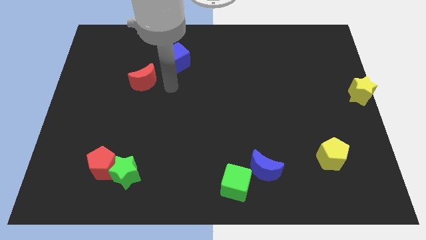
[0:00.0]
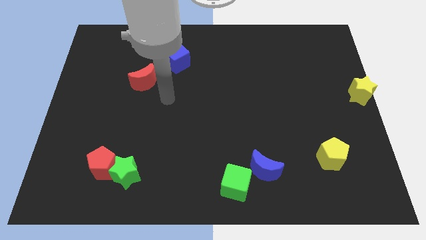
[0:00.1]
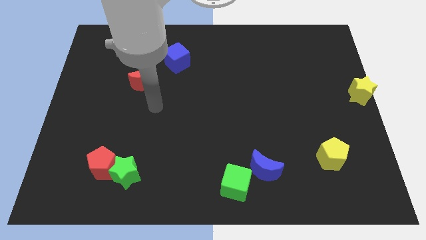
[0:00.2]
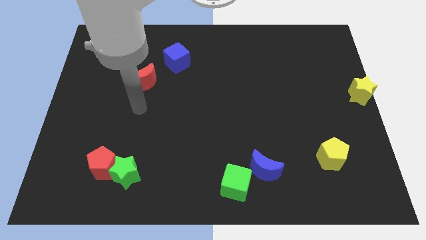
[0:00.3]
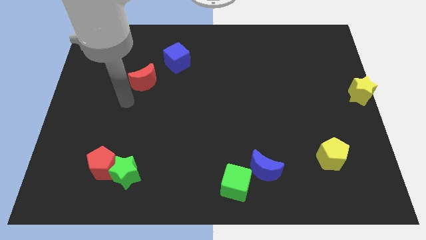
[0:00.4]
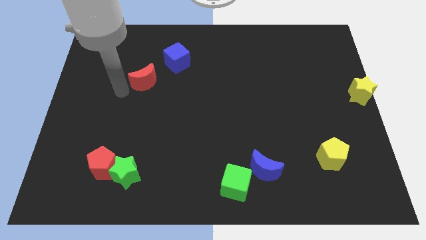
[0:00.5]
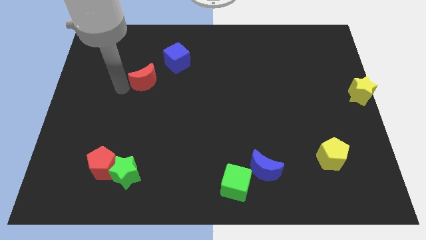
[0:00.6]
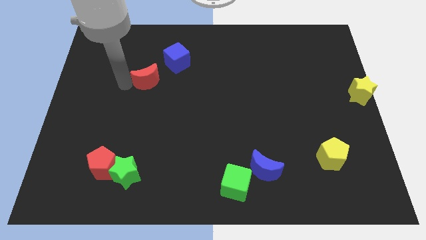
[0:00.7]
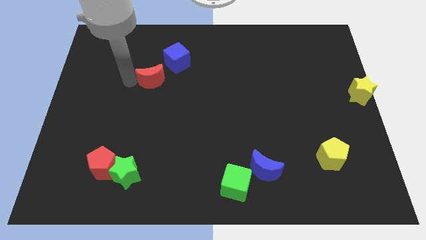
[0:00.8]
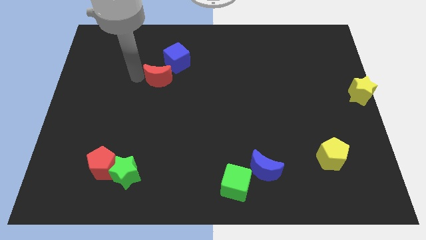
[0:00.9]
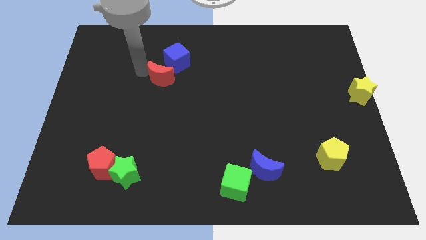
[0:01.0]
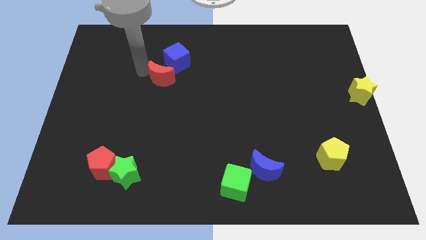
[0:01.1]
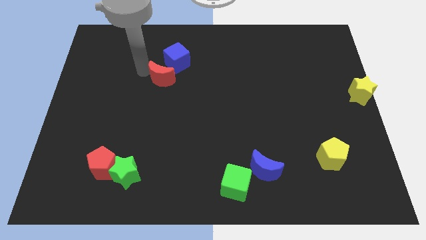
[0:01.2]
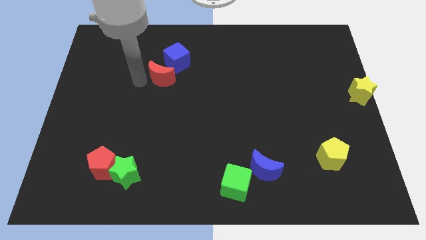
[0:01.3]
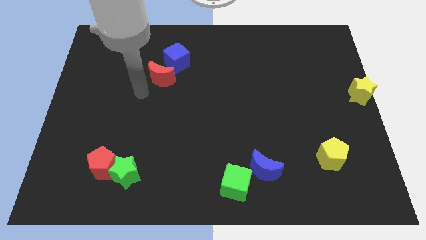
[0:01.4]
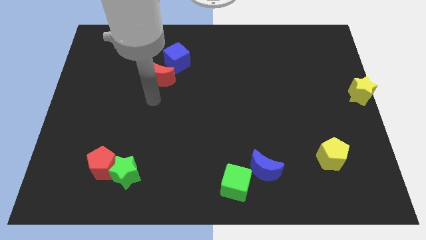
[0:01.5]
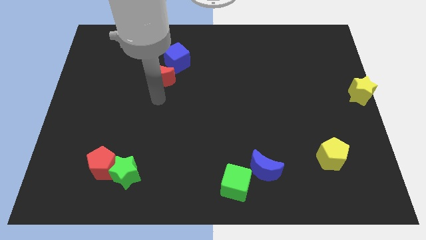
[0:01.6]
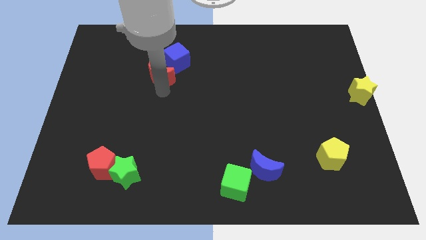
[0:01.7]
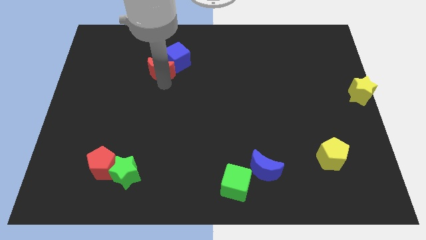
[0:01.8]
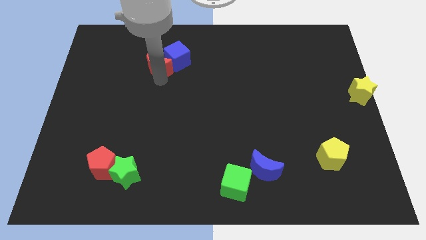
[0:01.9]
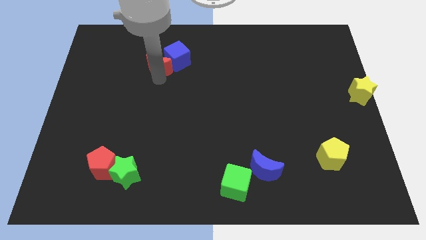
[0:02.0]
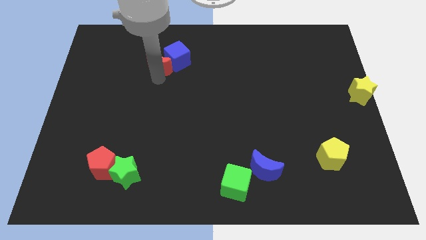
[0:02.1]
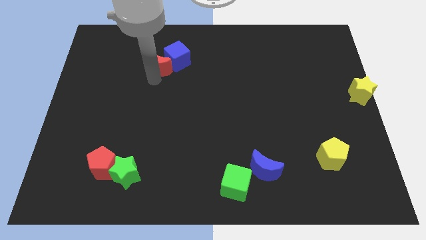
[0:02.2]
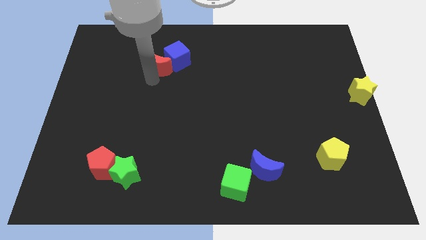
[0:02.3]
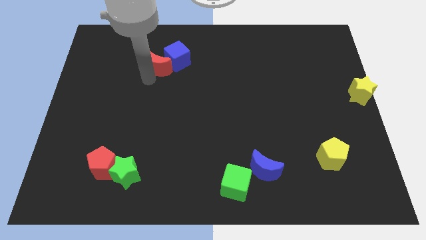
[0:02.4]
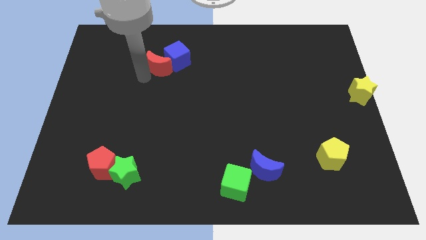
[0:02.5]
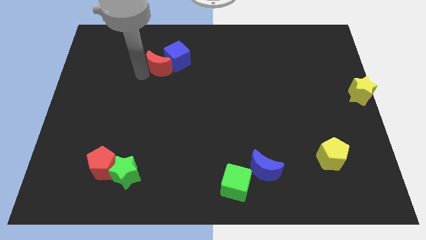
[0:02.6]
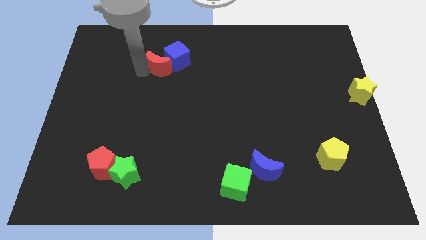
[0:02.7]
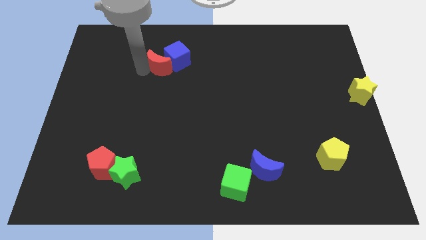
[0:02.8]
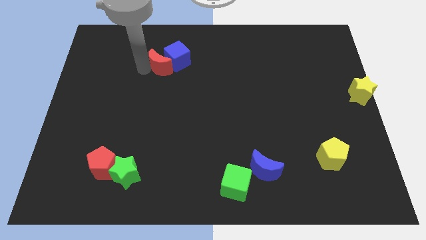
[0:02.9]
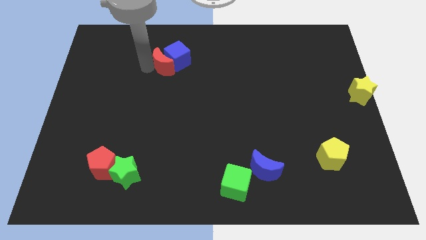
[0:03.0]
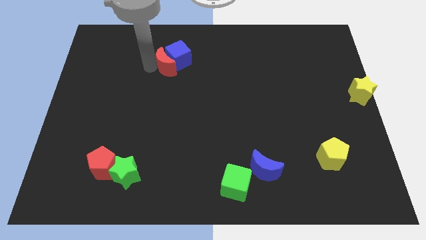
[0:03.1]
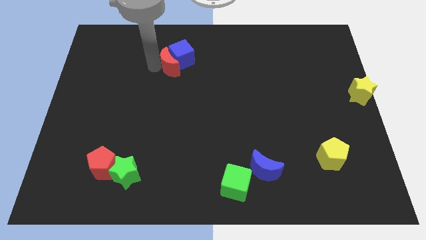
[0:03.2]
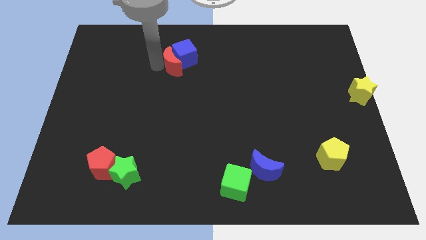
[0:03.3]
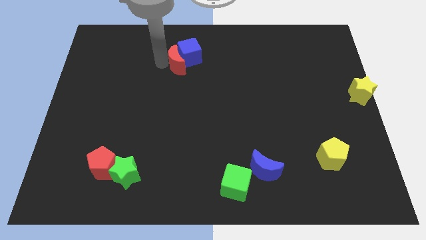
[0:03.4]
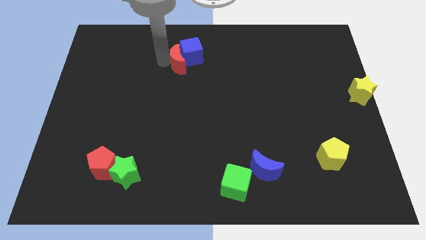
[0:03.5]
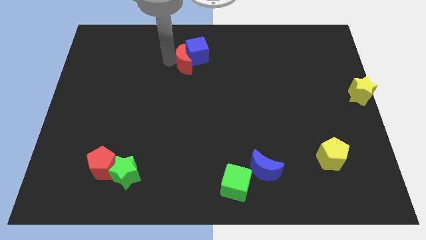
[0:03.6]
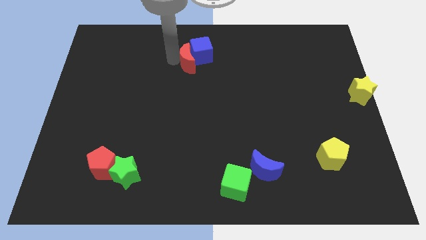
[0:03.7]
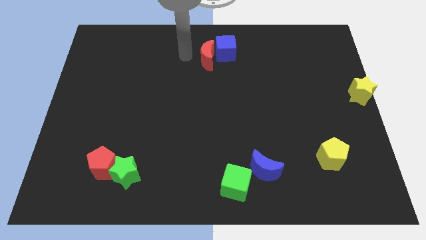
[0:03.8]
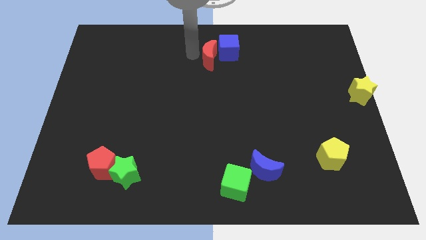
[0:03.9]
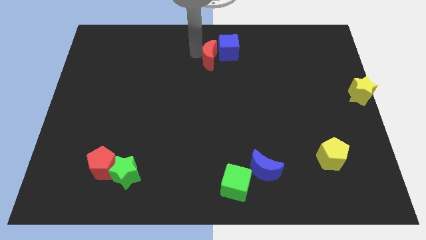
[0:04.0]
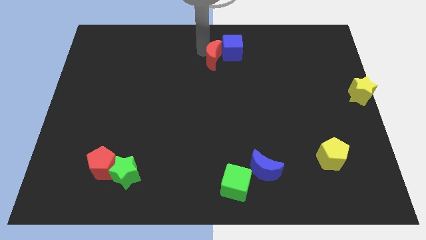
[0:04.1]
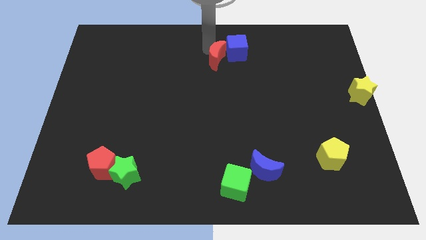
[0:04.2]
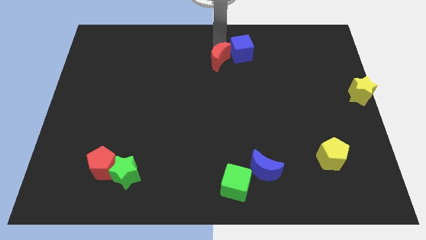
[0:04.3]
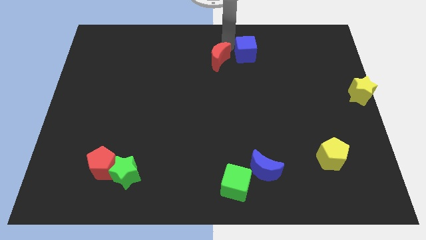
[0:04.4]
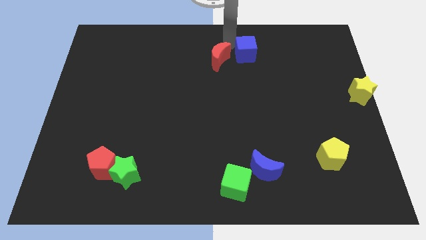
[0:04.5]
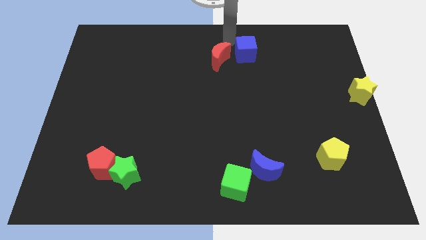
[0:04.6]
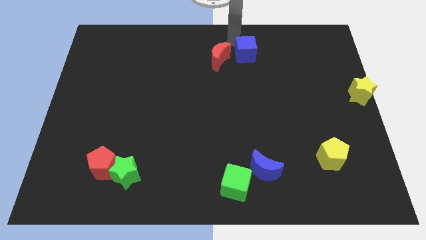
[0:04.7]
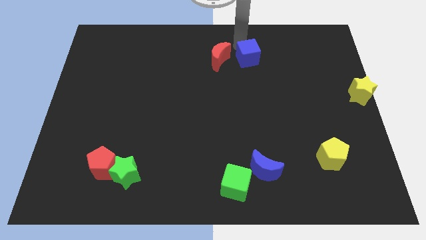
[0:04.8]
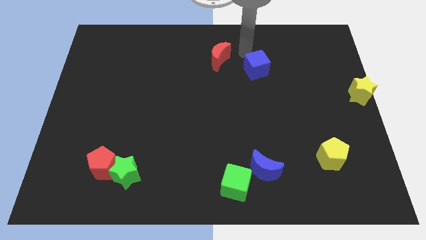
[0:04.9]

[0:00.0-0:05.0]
move the blue cube with the help of red crescent towards the right side of the board

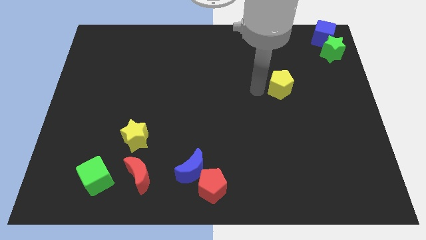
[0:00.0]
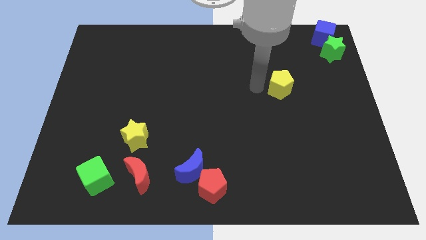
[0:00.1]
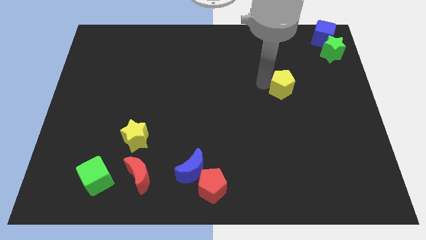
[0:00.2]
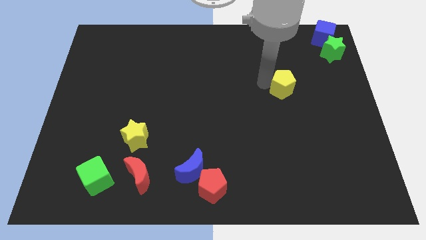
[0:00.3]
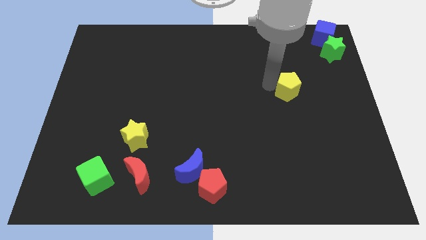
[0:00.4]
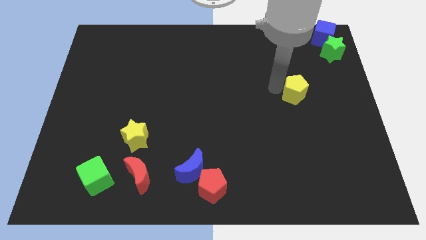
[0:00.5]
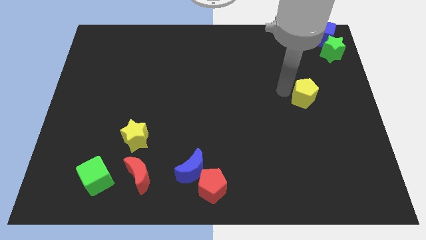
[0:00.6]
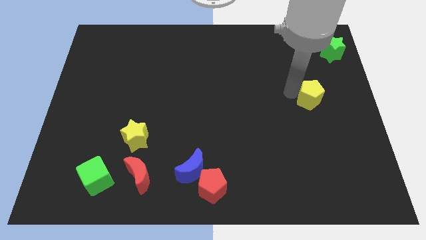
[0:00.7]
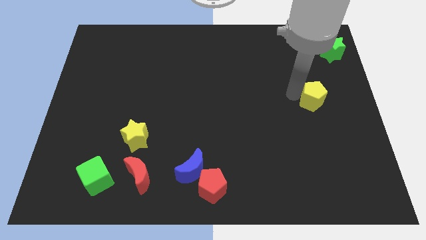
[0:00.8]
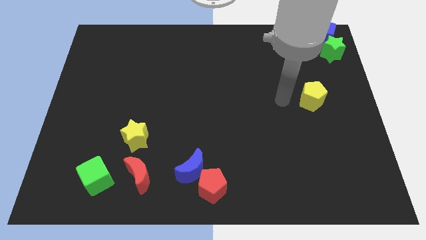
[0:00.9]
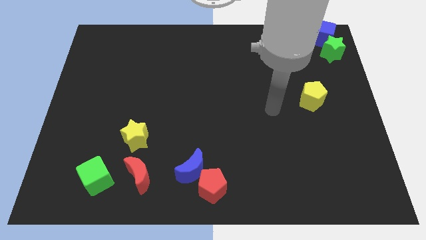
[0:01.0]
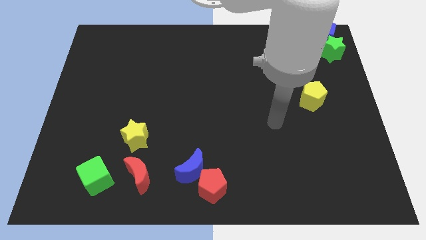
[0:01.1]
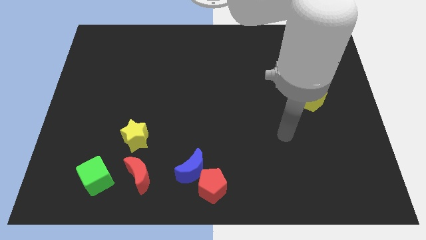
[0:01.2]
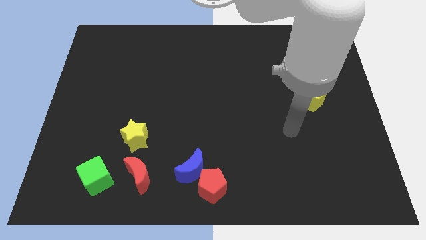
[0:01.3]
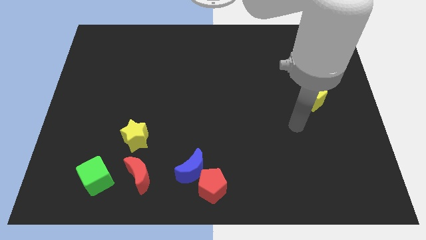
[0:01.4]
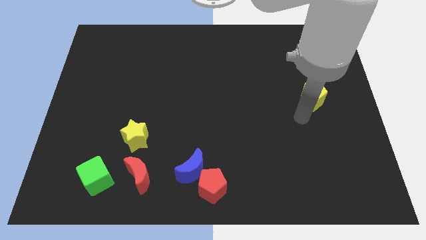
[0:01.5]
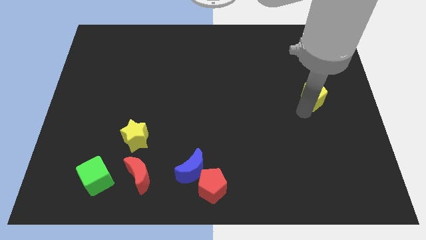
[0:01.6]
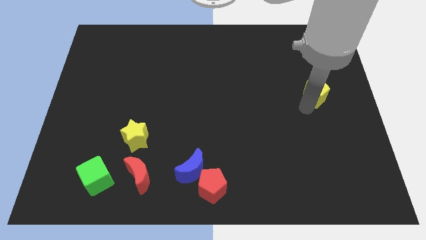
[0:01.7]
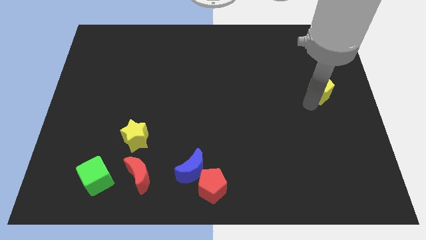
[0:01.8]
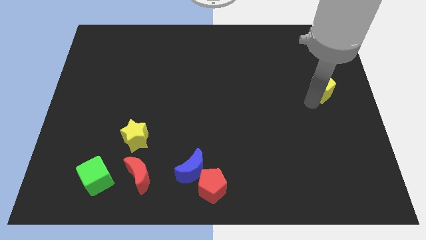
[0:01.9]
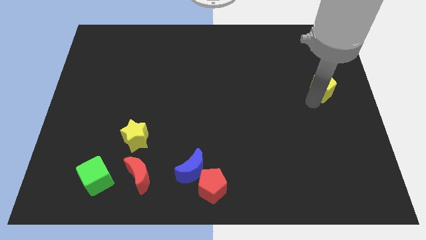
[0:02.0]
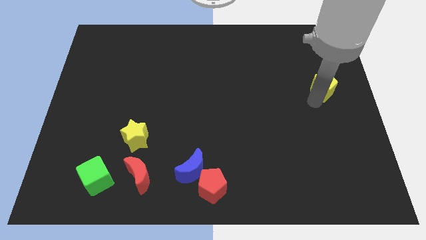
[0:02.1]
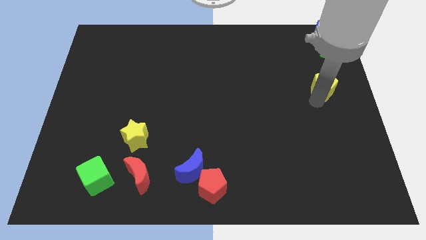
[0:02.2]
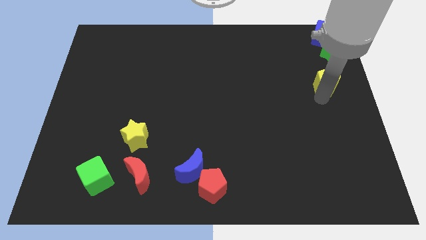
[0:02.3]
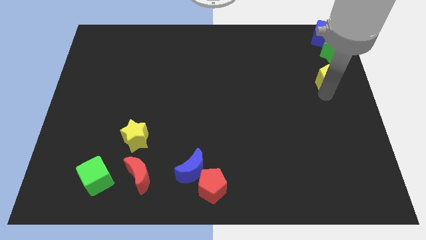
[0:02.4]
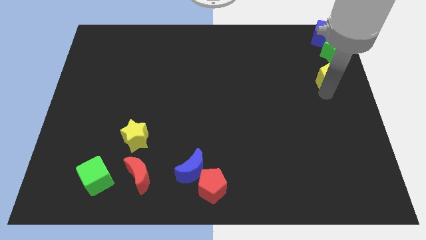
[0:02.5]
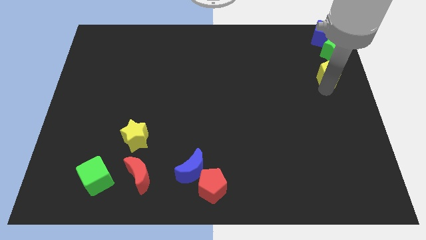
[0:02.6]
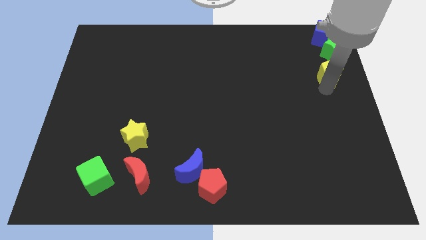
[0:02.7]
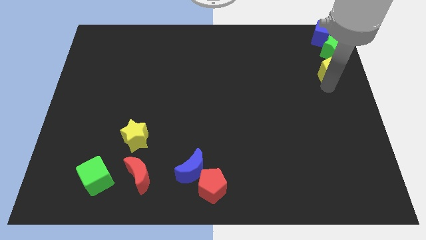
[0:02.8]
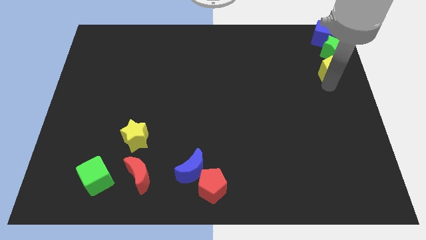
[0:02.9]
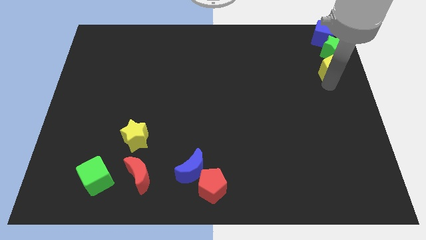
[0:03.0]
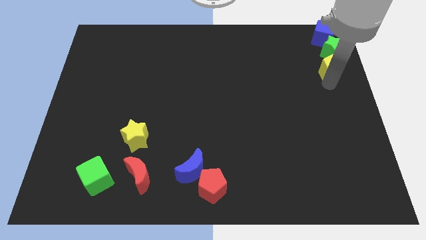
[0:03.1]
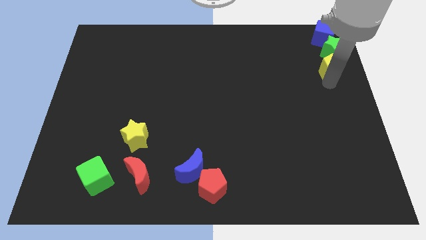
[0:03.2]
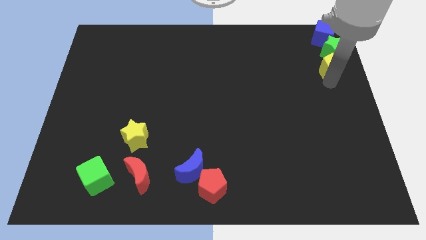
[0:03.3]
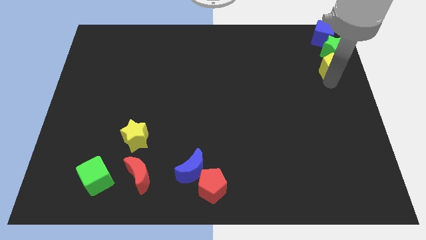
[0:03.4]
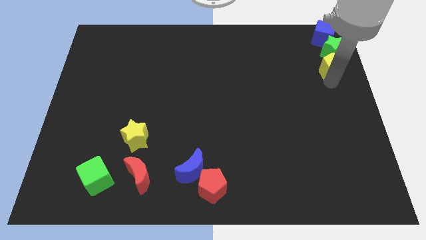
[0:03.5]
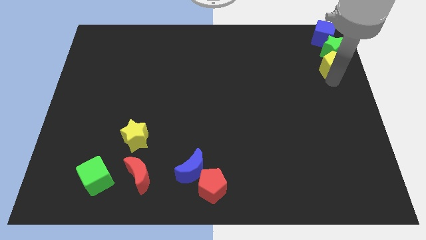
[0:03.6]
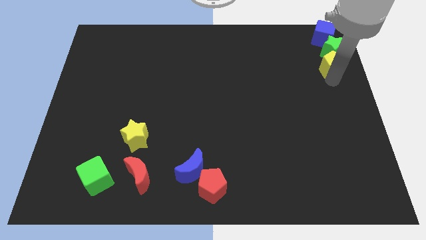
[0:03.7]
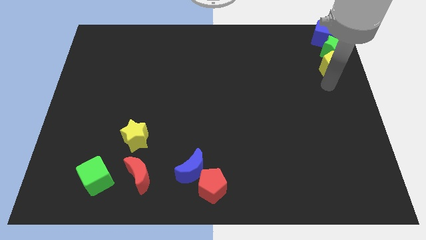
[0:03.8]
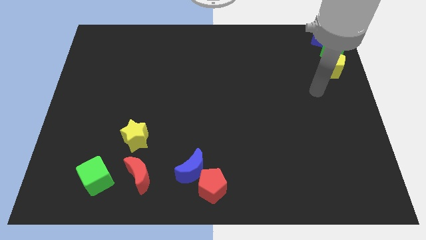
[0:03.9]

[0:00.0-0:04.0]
push the yellow pentagon to the bottom of the green star
